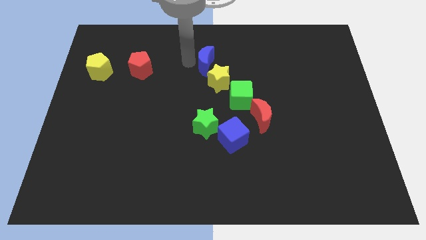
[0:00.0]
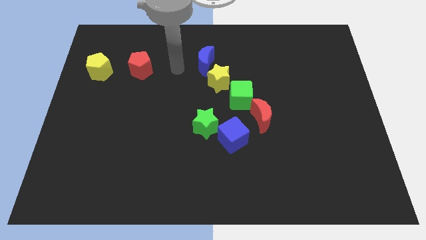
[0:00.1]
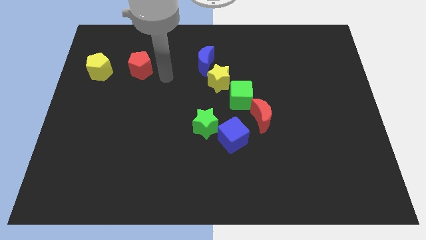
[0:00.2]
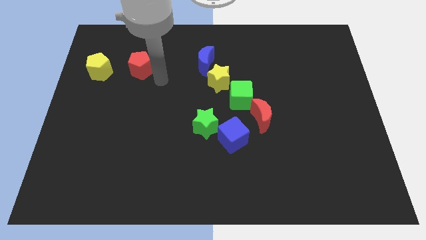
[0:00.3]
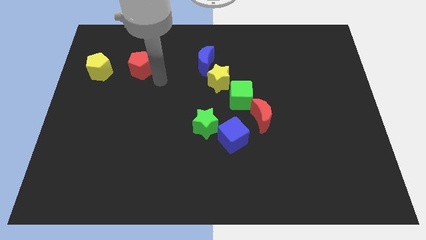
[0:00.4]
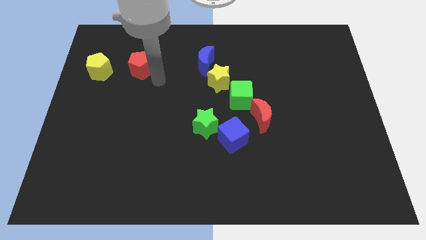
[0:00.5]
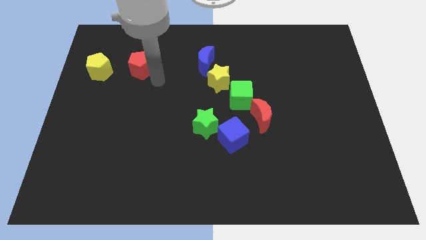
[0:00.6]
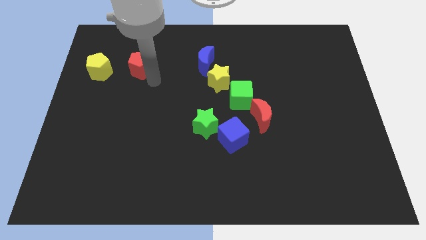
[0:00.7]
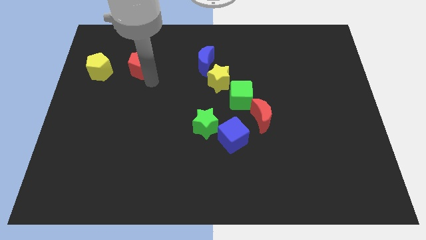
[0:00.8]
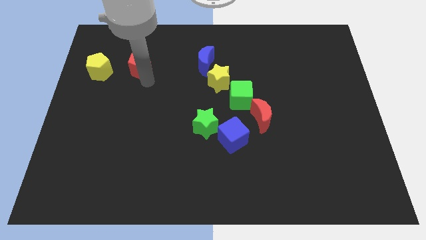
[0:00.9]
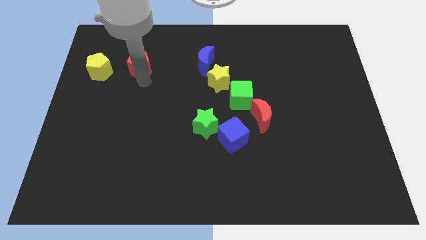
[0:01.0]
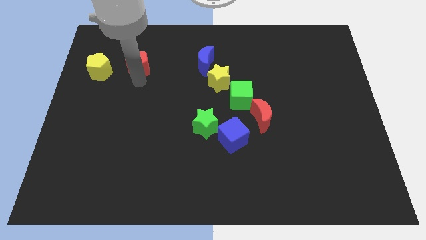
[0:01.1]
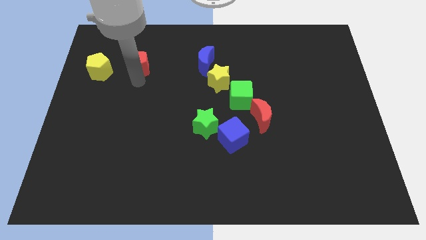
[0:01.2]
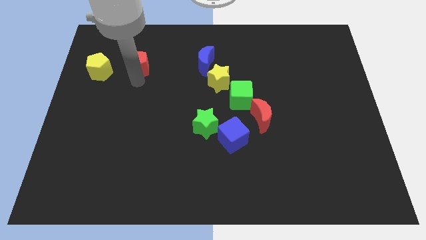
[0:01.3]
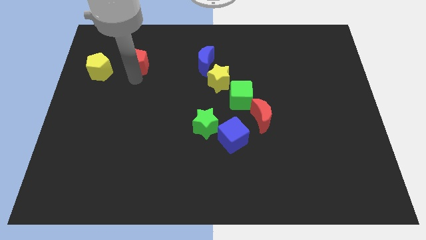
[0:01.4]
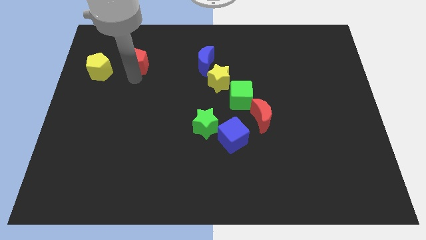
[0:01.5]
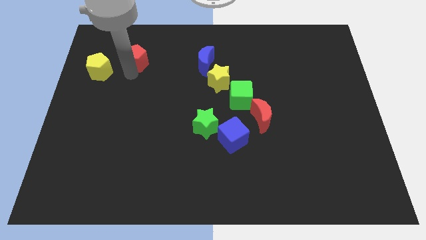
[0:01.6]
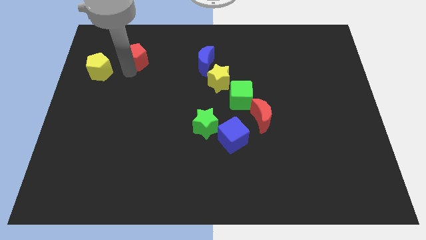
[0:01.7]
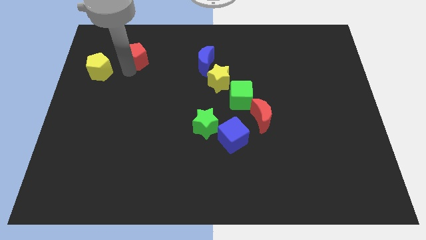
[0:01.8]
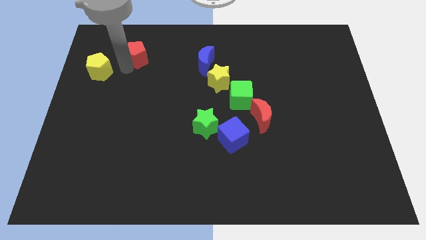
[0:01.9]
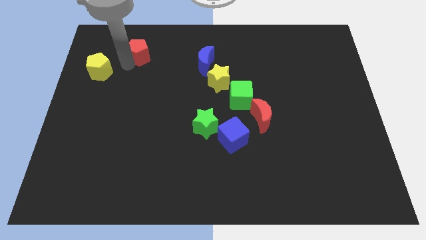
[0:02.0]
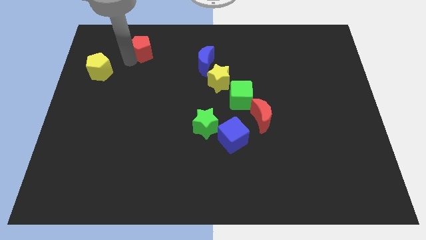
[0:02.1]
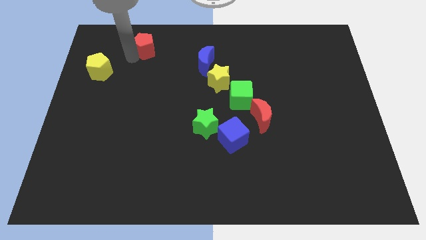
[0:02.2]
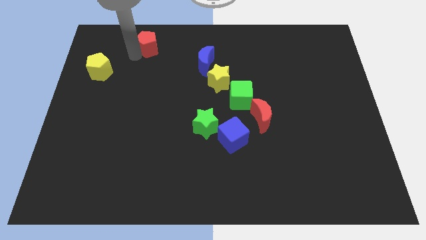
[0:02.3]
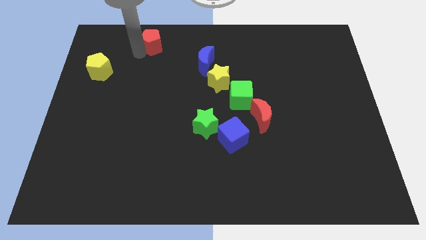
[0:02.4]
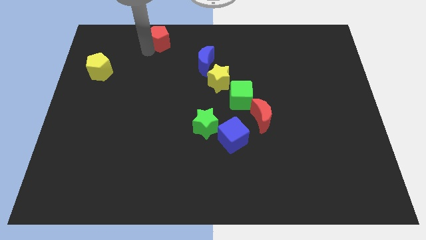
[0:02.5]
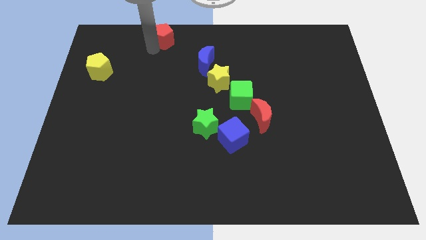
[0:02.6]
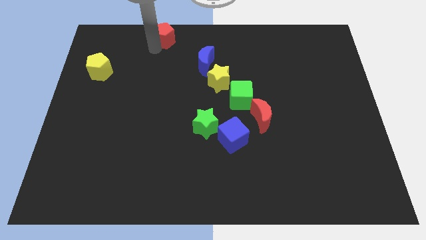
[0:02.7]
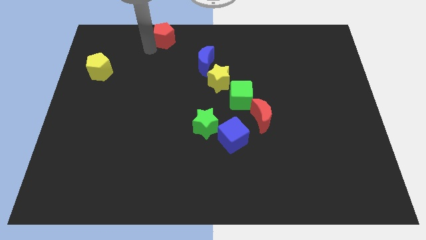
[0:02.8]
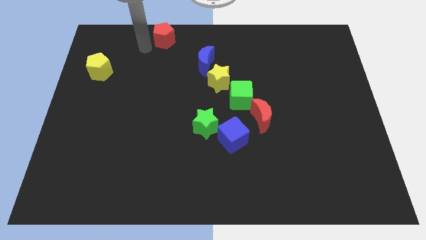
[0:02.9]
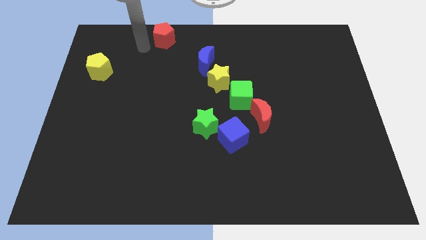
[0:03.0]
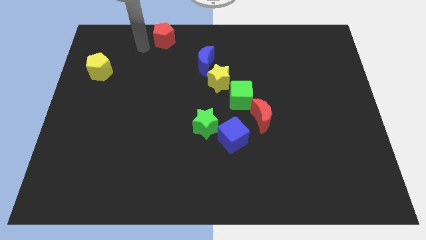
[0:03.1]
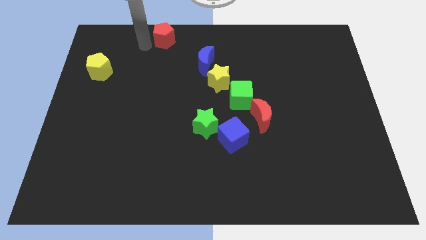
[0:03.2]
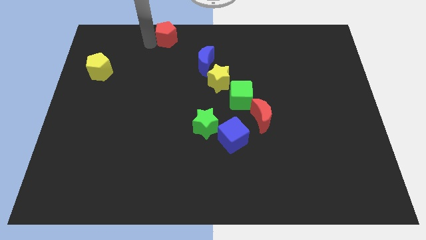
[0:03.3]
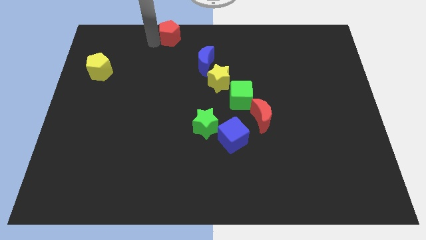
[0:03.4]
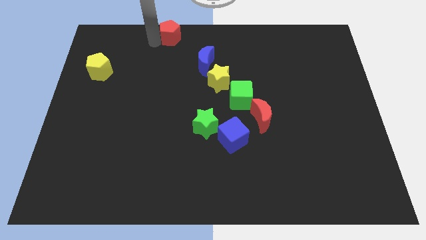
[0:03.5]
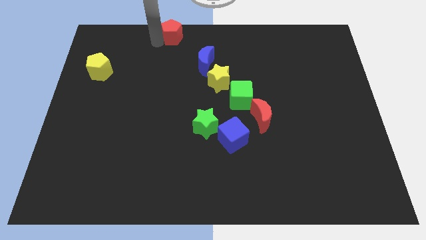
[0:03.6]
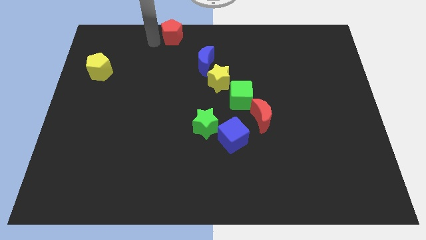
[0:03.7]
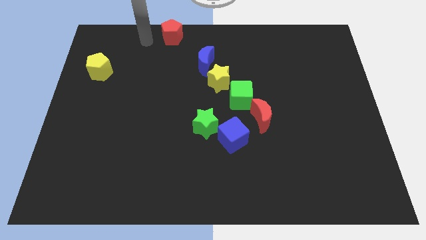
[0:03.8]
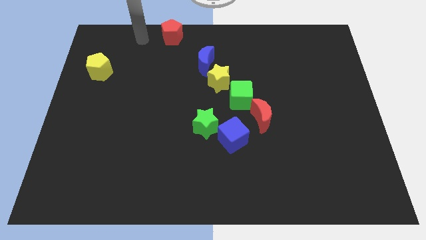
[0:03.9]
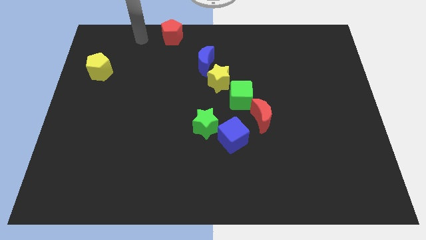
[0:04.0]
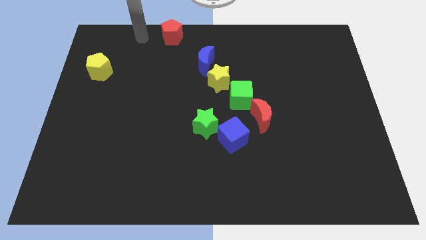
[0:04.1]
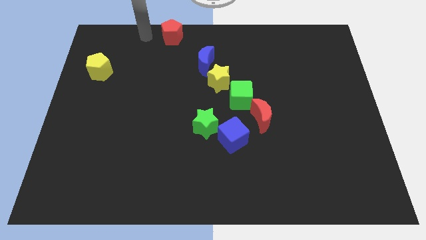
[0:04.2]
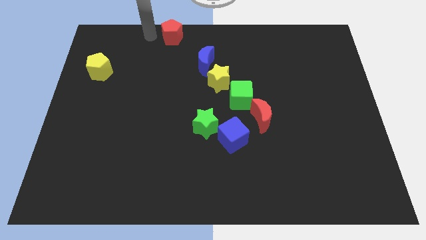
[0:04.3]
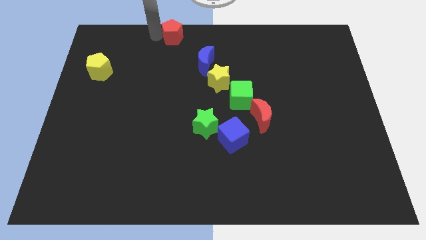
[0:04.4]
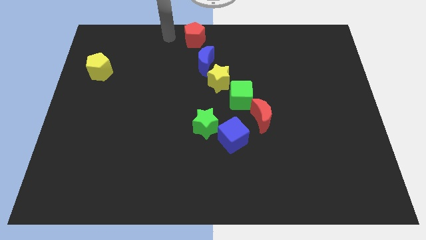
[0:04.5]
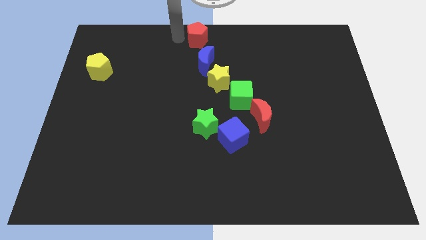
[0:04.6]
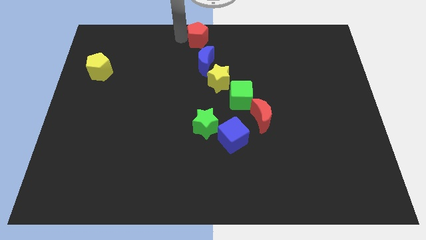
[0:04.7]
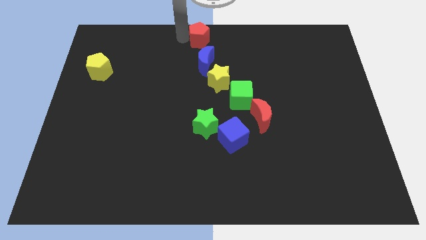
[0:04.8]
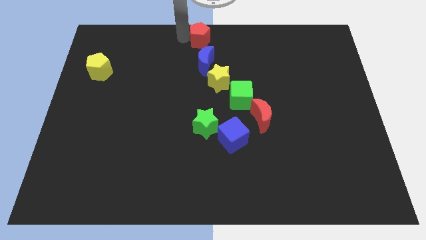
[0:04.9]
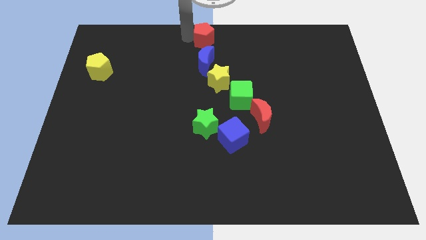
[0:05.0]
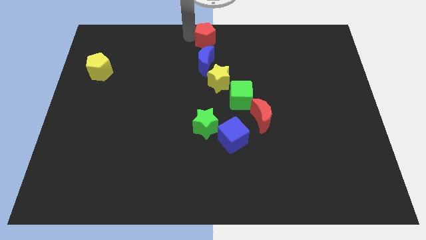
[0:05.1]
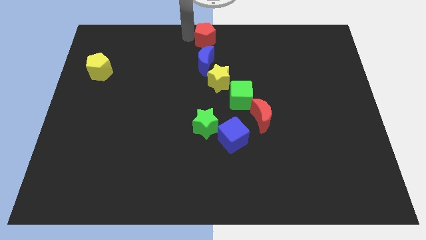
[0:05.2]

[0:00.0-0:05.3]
place red pentagon at the top center of the board

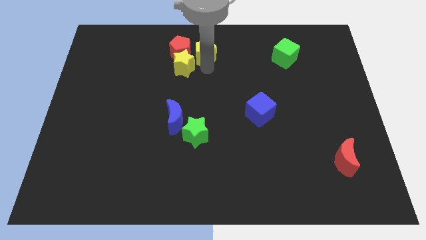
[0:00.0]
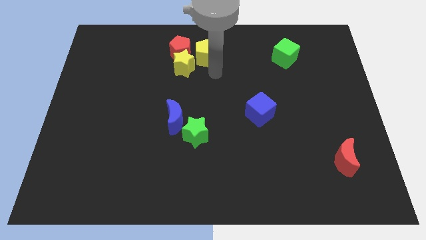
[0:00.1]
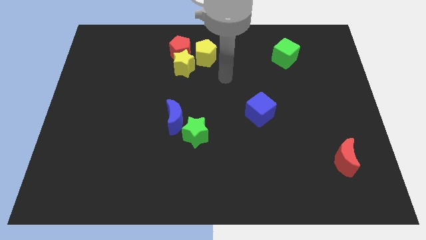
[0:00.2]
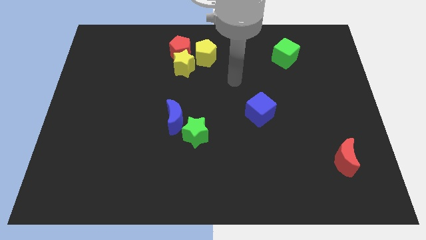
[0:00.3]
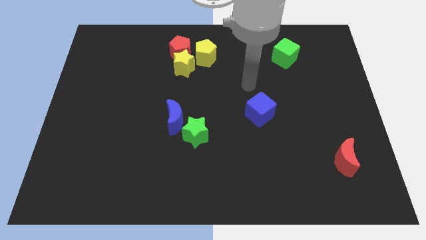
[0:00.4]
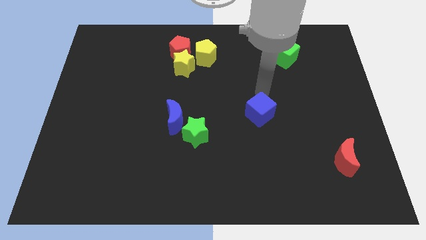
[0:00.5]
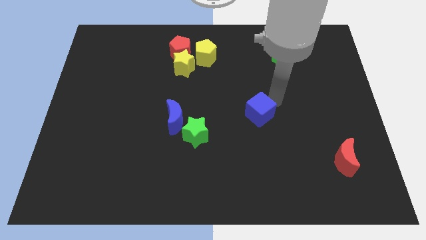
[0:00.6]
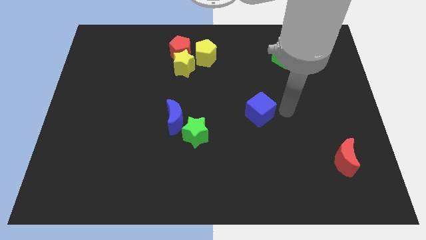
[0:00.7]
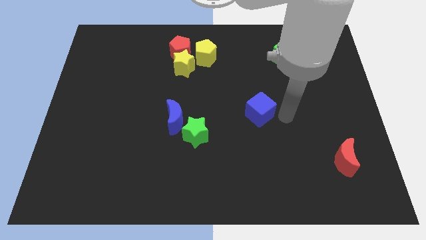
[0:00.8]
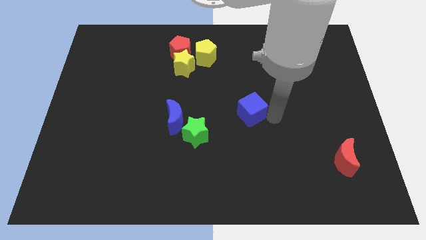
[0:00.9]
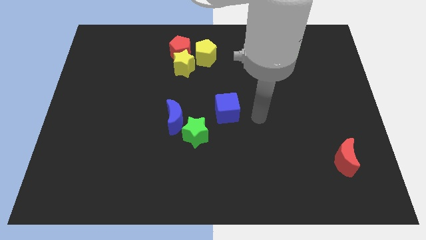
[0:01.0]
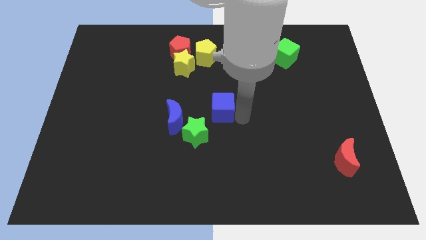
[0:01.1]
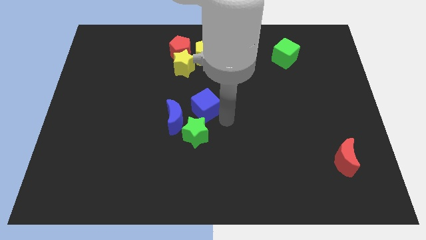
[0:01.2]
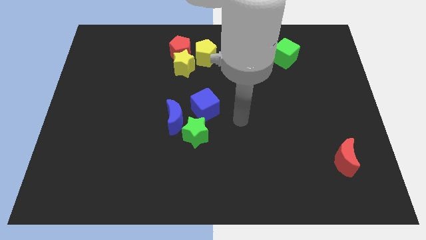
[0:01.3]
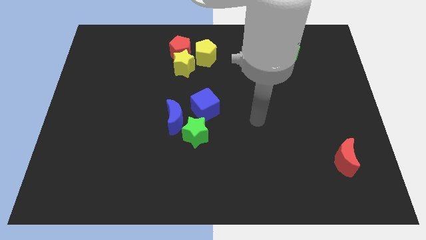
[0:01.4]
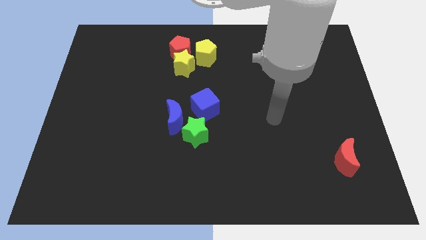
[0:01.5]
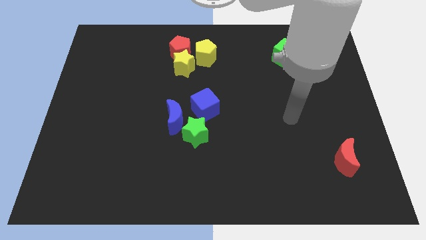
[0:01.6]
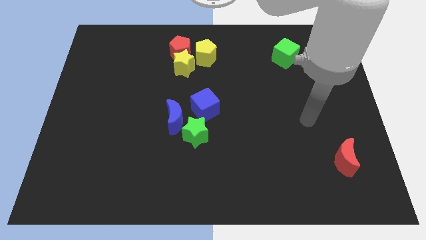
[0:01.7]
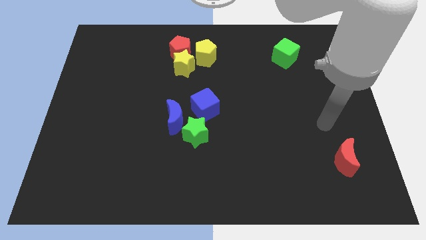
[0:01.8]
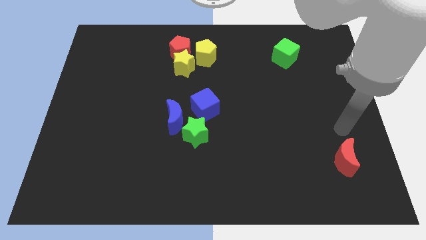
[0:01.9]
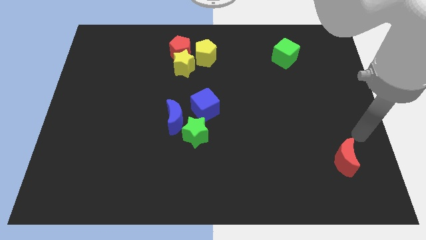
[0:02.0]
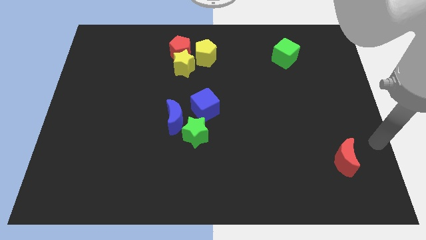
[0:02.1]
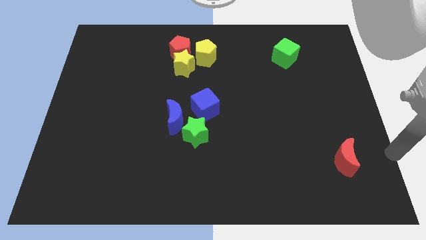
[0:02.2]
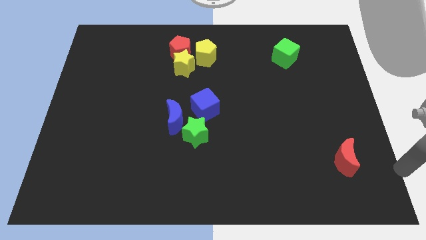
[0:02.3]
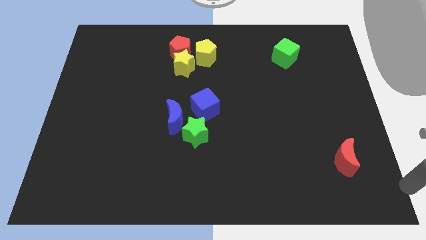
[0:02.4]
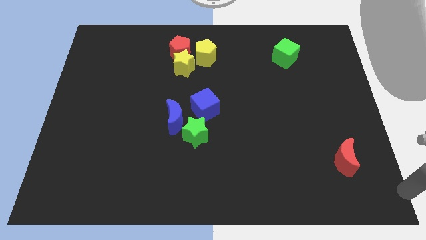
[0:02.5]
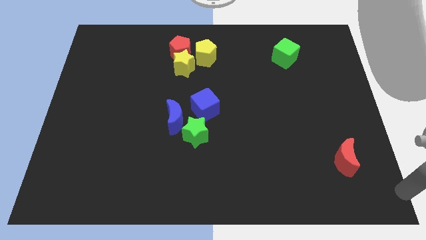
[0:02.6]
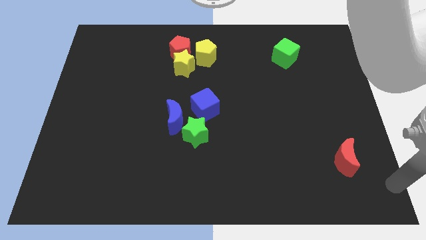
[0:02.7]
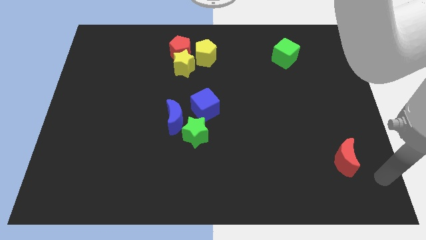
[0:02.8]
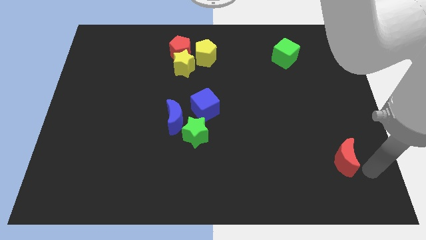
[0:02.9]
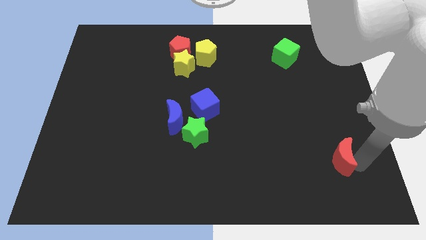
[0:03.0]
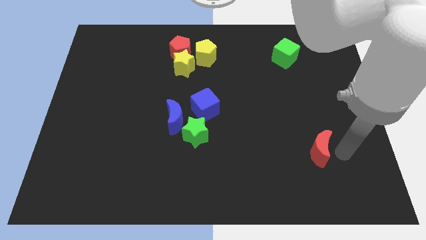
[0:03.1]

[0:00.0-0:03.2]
move the blue cube vertically above the green star

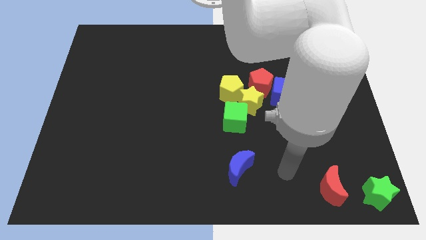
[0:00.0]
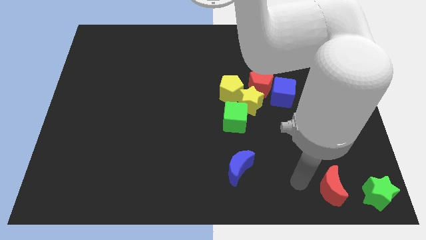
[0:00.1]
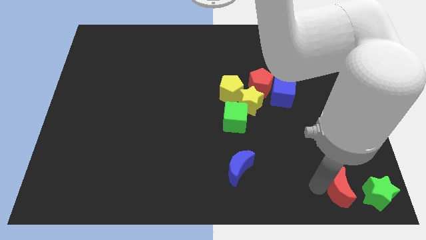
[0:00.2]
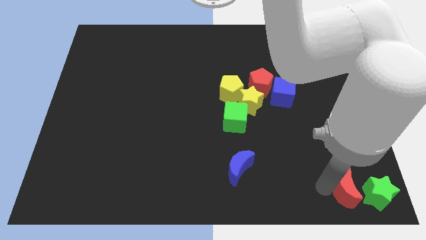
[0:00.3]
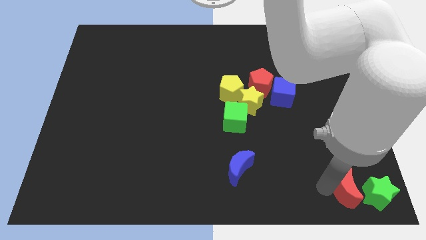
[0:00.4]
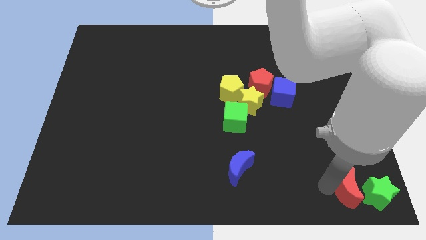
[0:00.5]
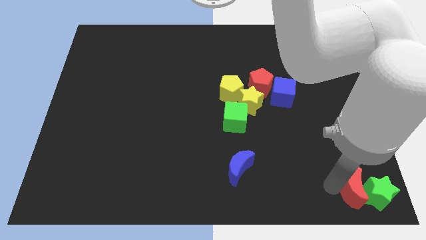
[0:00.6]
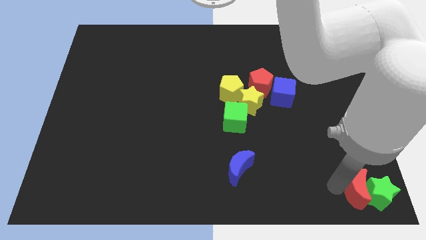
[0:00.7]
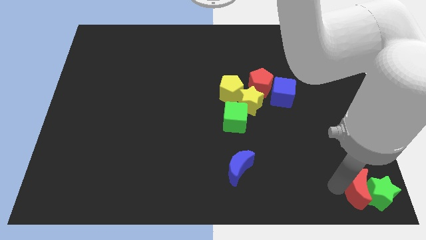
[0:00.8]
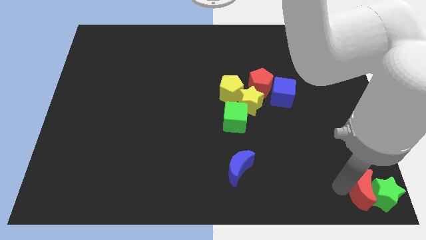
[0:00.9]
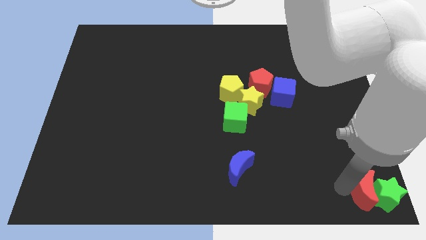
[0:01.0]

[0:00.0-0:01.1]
move red crescent in to green star
